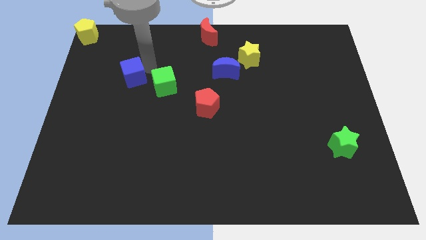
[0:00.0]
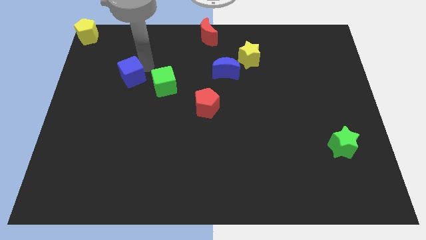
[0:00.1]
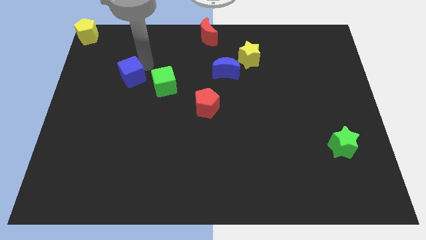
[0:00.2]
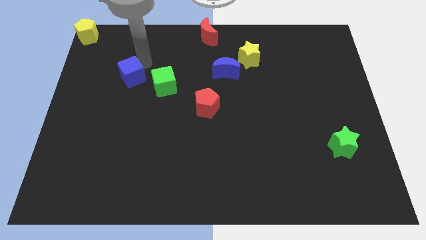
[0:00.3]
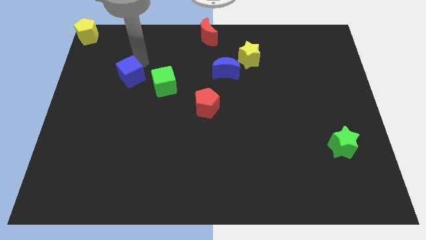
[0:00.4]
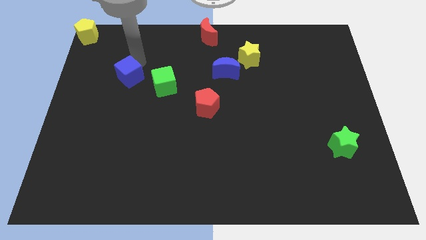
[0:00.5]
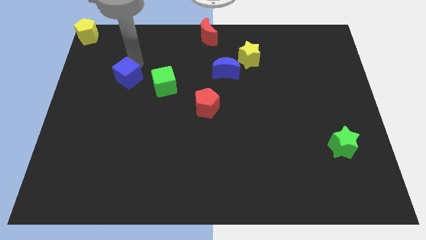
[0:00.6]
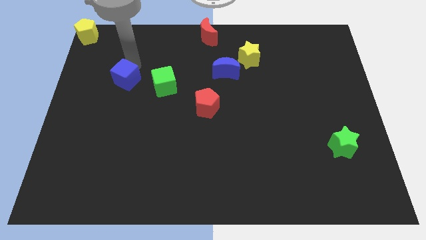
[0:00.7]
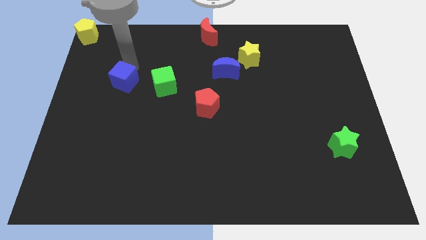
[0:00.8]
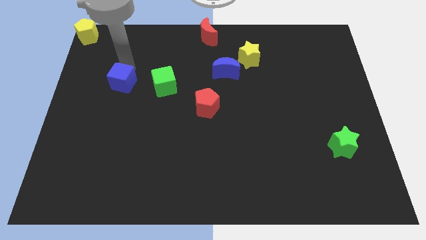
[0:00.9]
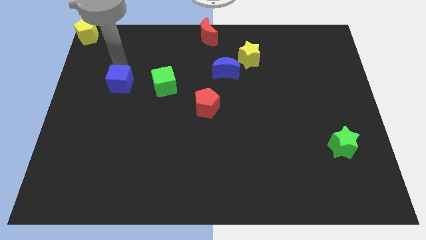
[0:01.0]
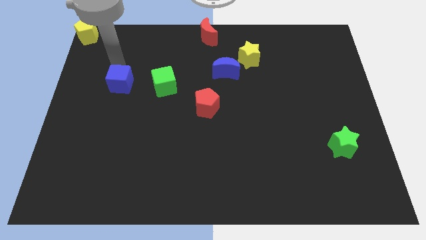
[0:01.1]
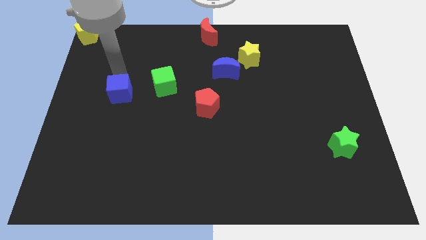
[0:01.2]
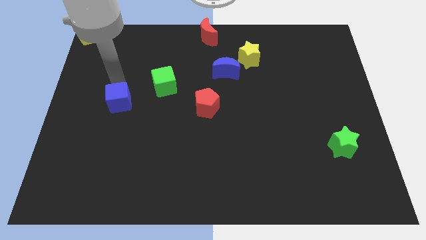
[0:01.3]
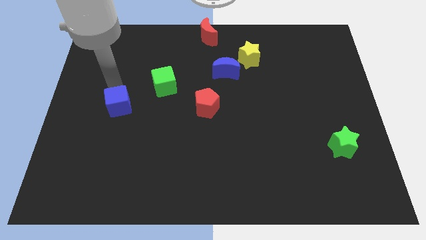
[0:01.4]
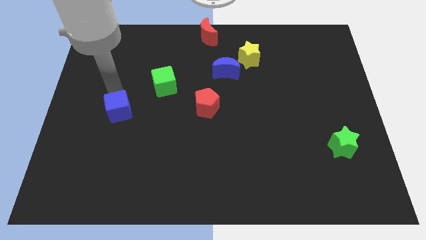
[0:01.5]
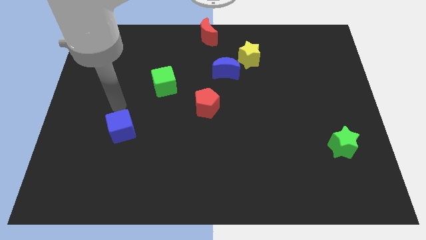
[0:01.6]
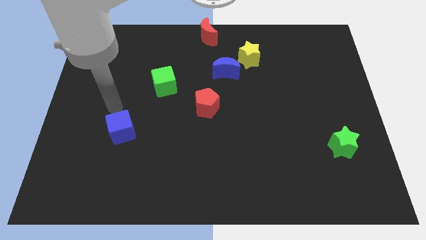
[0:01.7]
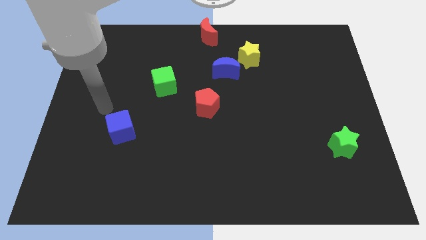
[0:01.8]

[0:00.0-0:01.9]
move the blue cube towards the bottom center of the board

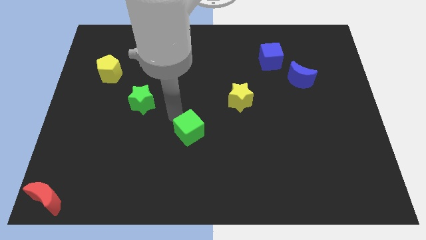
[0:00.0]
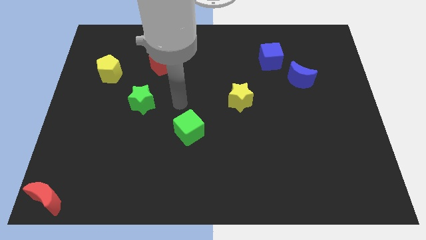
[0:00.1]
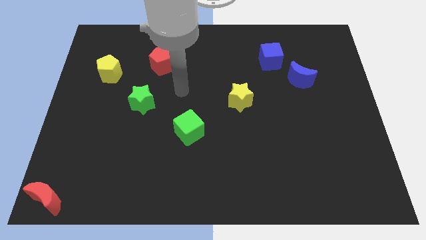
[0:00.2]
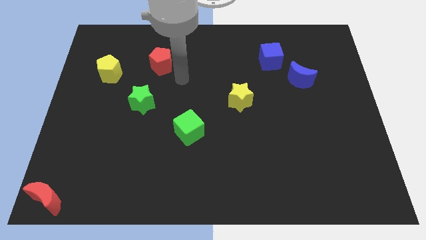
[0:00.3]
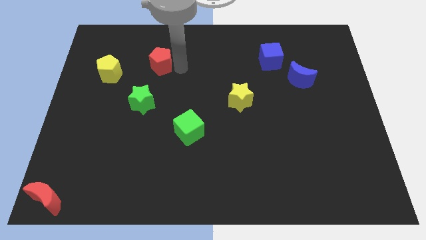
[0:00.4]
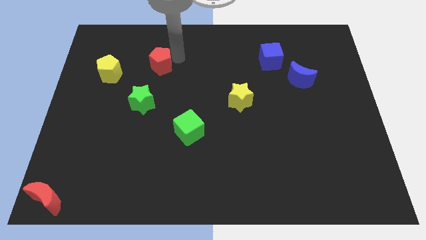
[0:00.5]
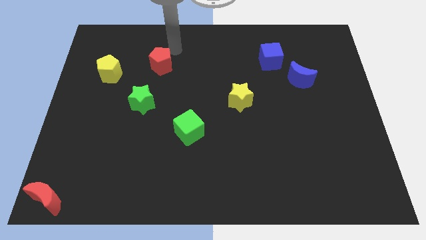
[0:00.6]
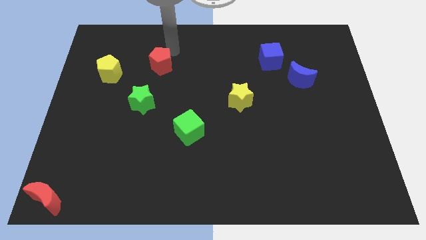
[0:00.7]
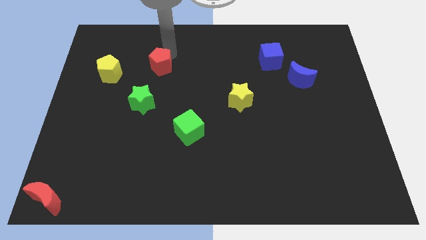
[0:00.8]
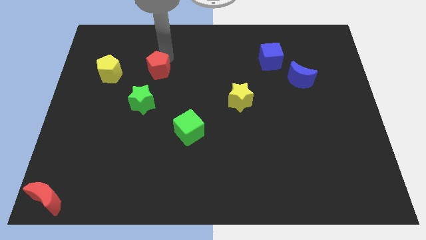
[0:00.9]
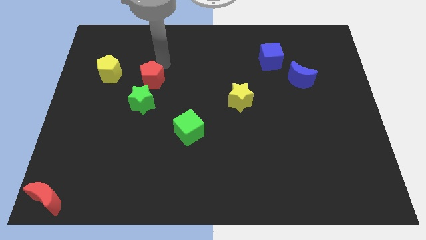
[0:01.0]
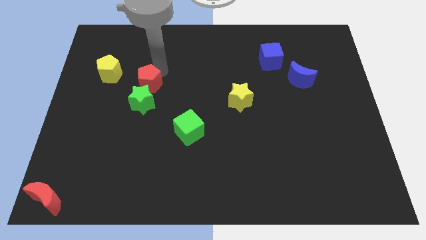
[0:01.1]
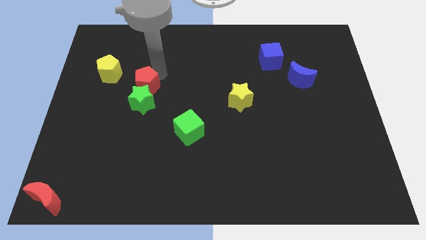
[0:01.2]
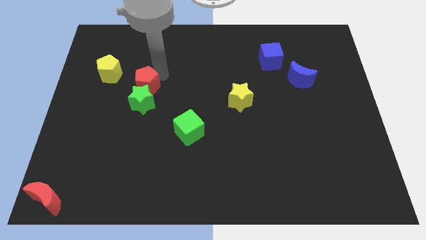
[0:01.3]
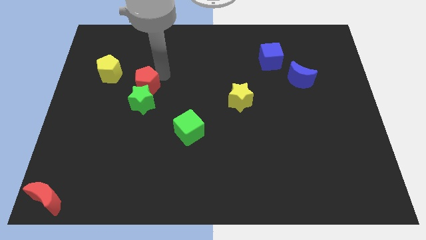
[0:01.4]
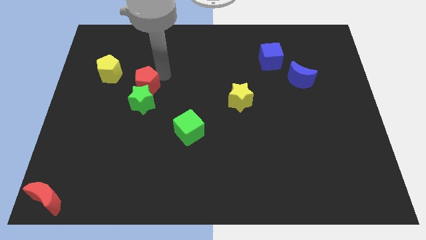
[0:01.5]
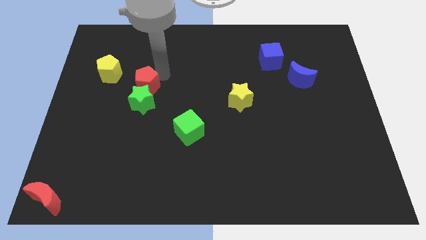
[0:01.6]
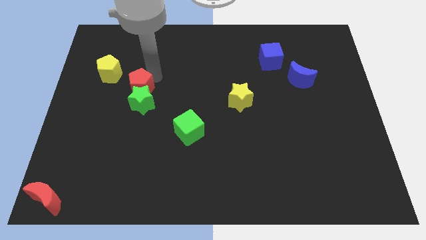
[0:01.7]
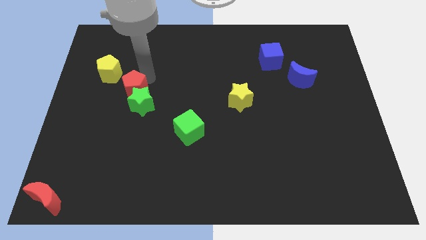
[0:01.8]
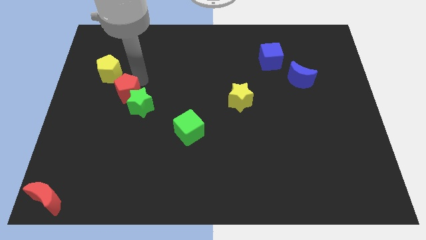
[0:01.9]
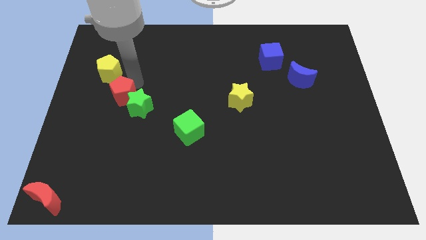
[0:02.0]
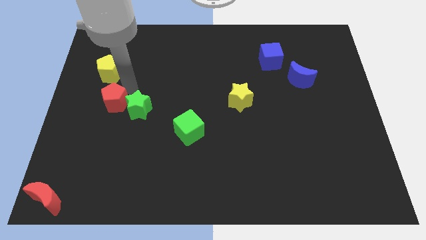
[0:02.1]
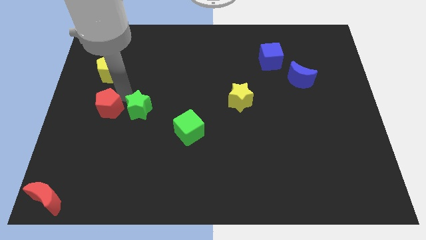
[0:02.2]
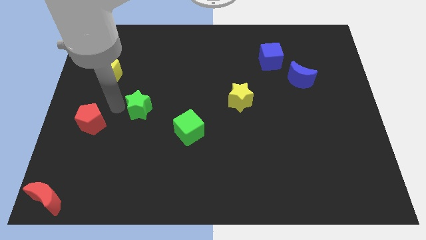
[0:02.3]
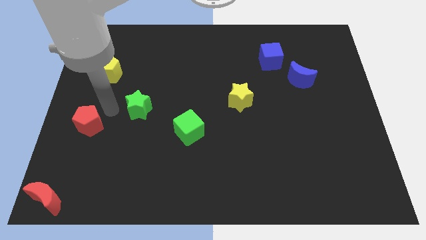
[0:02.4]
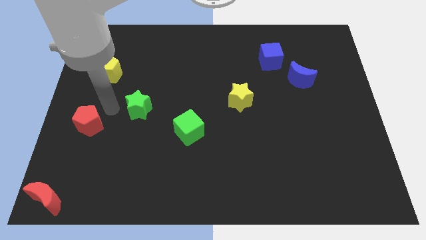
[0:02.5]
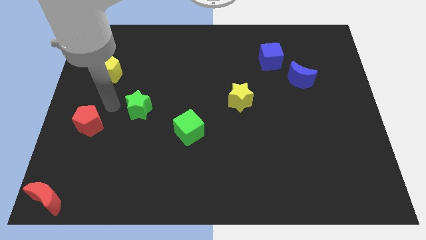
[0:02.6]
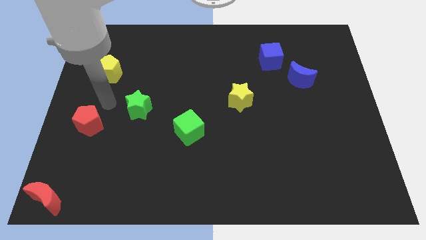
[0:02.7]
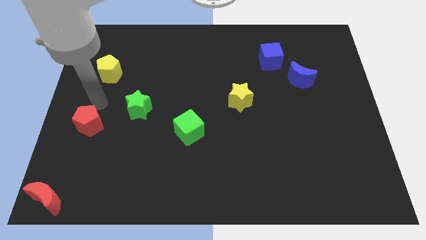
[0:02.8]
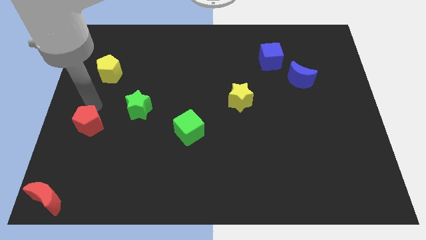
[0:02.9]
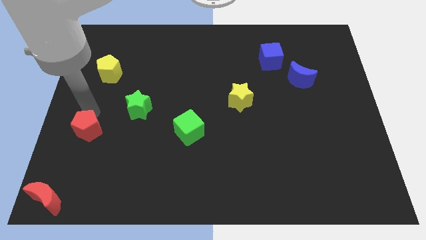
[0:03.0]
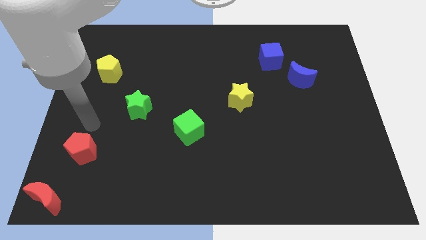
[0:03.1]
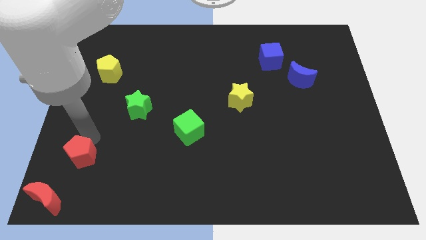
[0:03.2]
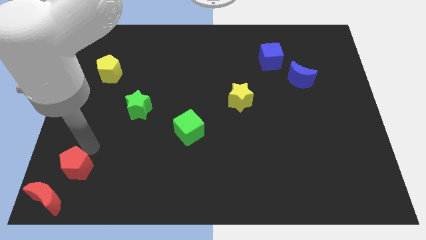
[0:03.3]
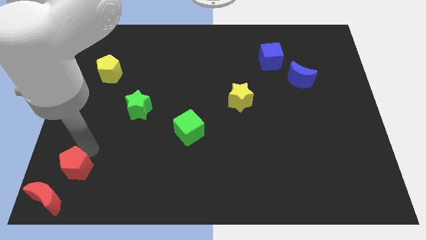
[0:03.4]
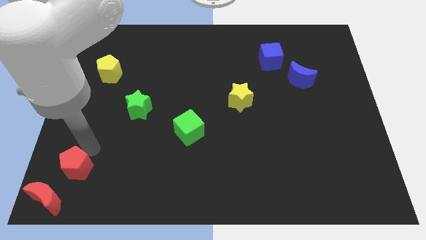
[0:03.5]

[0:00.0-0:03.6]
place the red pentagon diagonally right above red moon

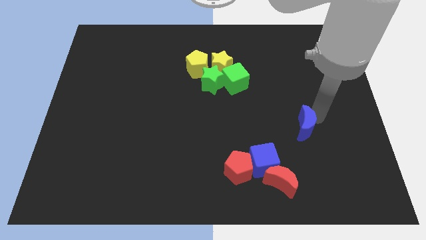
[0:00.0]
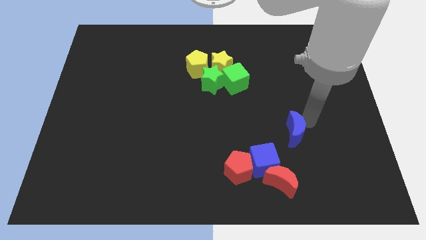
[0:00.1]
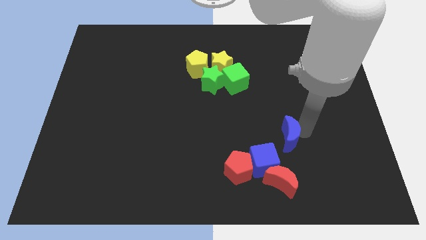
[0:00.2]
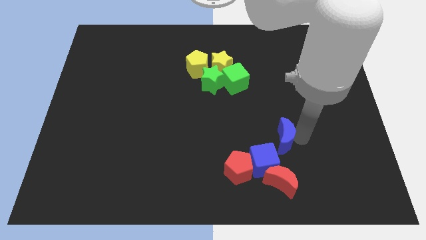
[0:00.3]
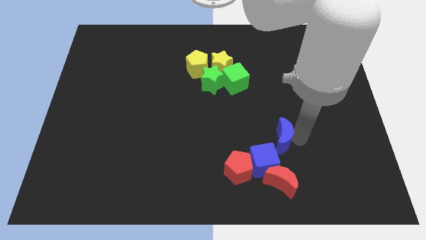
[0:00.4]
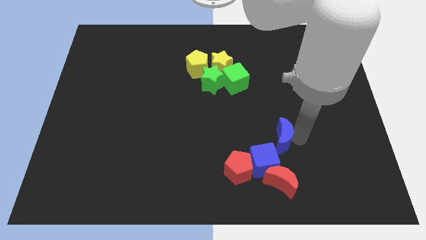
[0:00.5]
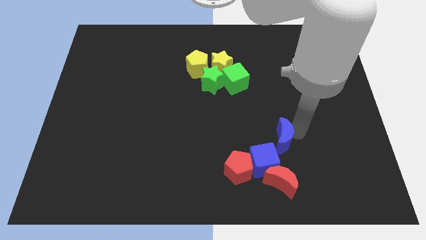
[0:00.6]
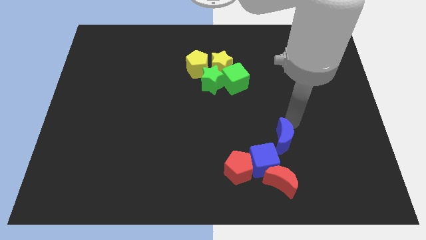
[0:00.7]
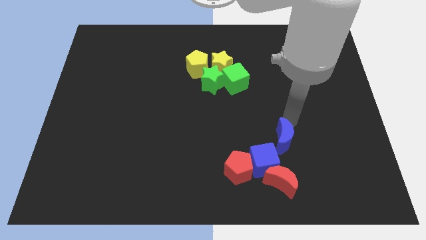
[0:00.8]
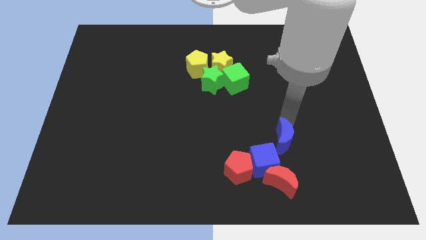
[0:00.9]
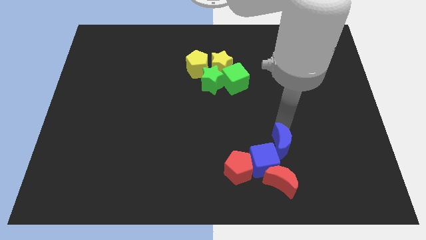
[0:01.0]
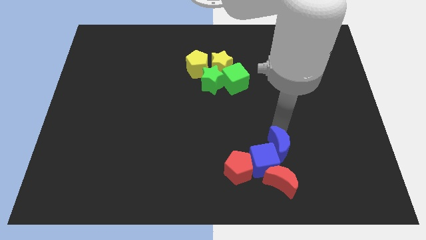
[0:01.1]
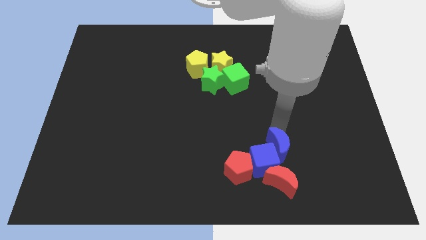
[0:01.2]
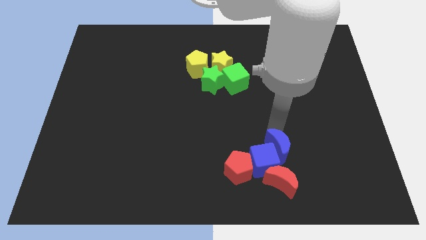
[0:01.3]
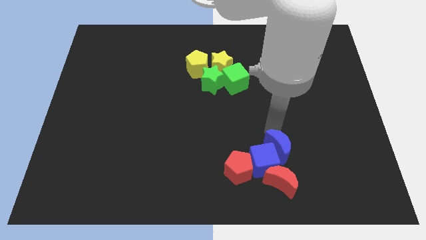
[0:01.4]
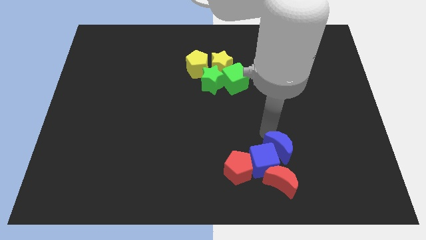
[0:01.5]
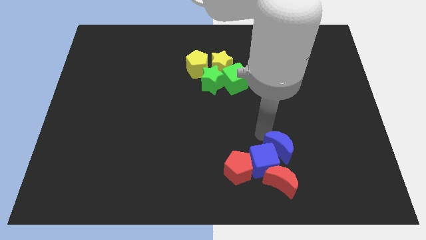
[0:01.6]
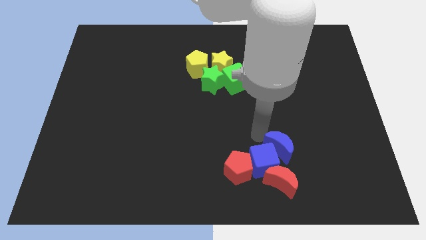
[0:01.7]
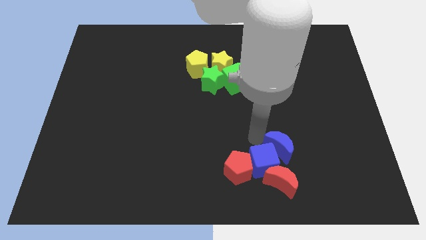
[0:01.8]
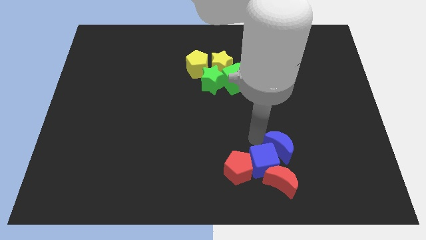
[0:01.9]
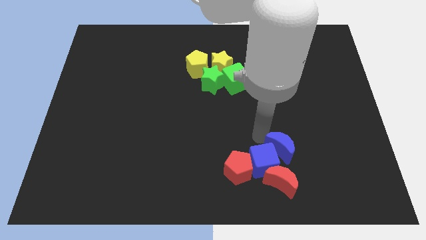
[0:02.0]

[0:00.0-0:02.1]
move the blue crescent to the right side of the blue cube

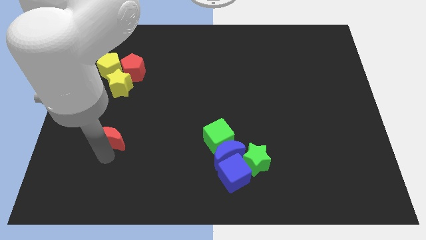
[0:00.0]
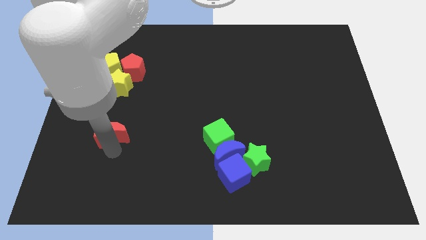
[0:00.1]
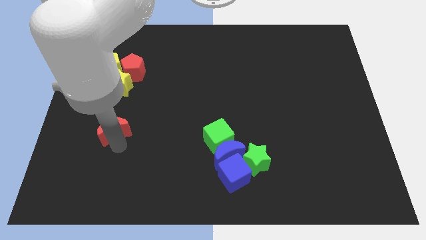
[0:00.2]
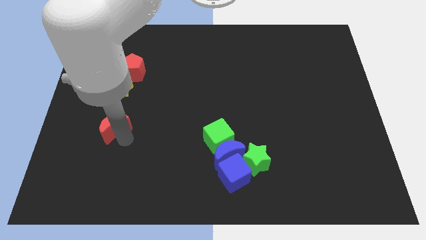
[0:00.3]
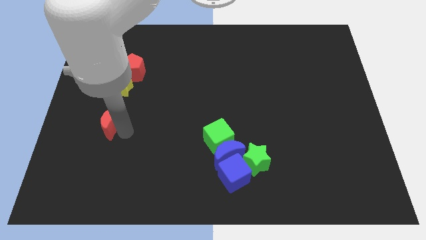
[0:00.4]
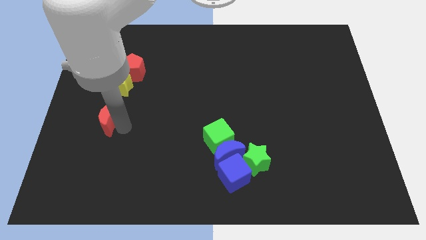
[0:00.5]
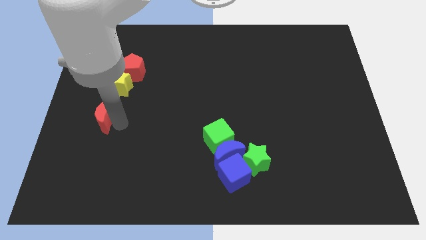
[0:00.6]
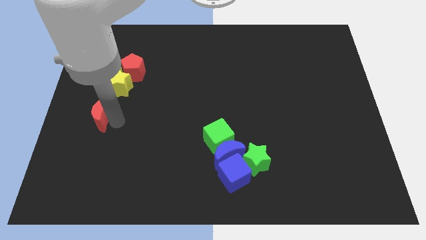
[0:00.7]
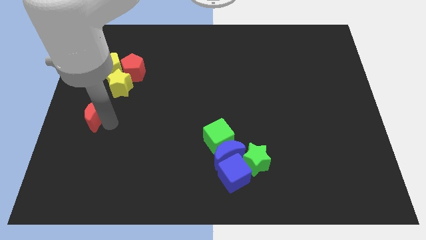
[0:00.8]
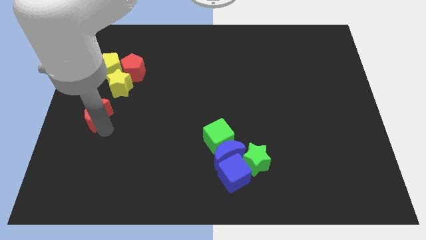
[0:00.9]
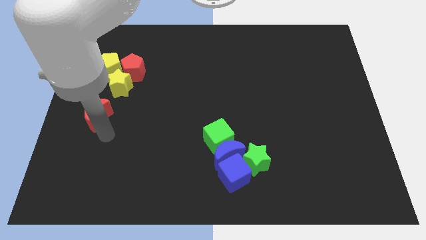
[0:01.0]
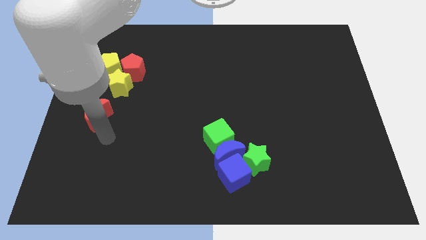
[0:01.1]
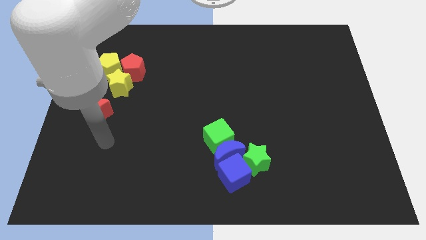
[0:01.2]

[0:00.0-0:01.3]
place the red moon on the bottom side of the yellow star
